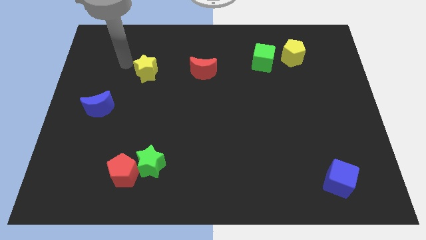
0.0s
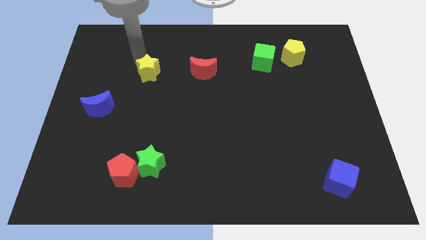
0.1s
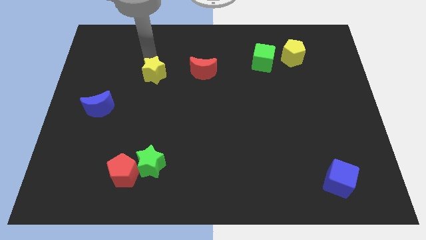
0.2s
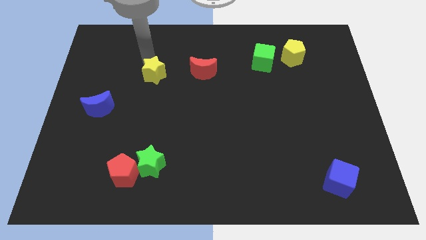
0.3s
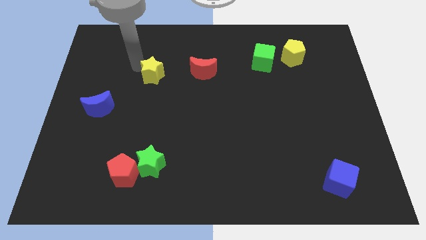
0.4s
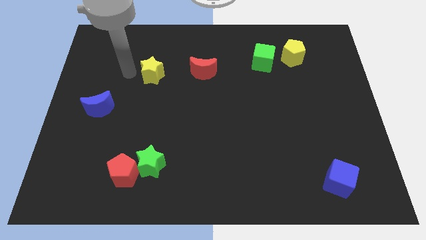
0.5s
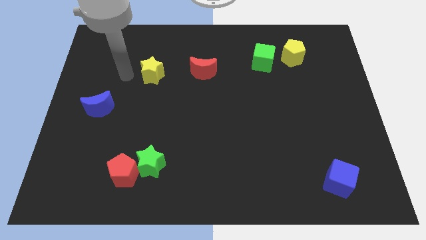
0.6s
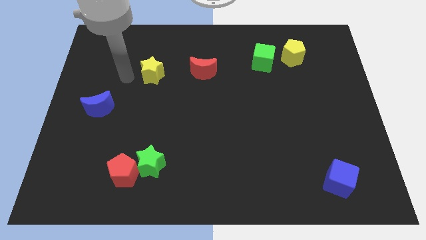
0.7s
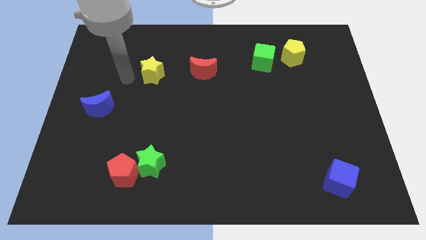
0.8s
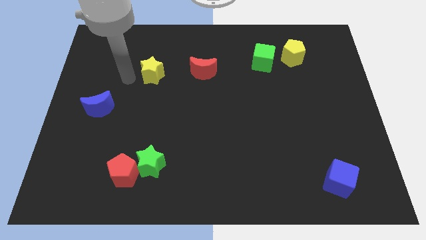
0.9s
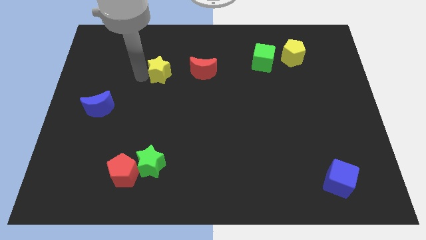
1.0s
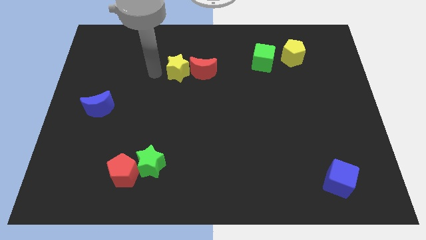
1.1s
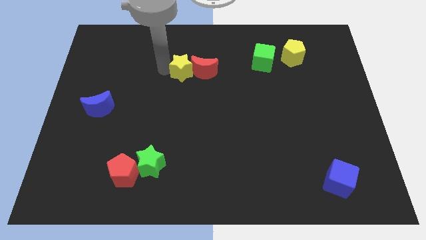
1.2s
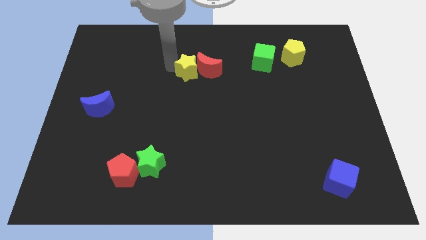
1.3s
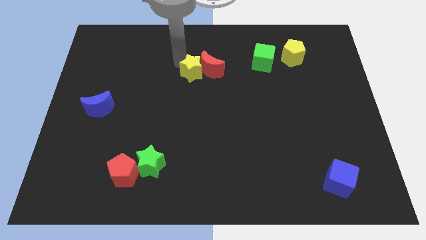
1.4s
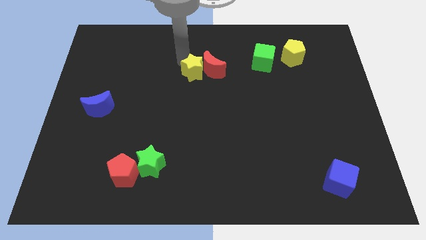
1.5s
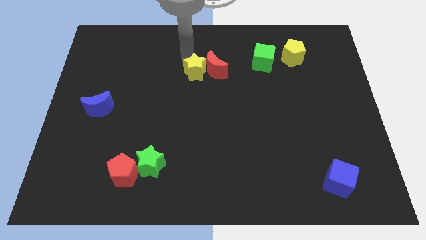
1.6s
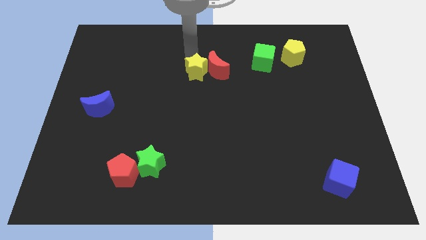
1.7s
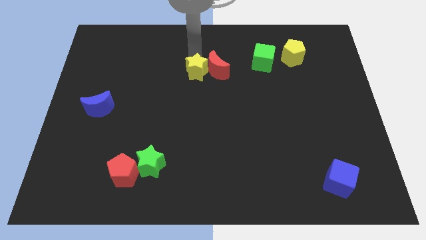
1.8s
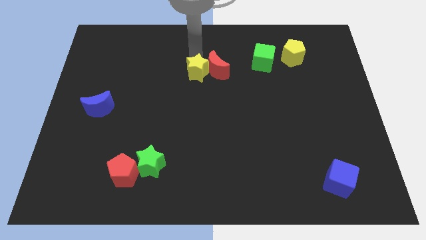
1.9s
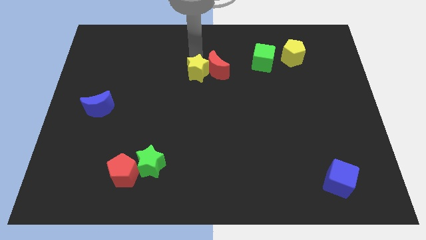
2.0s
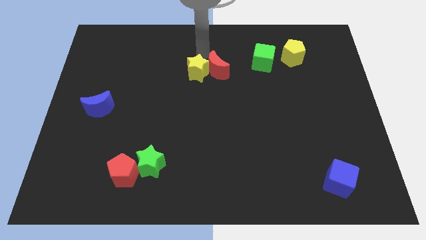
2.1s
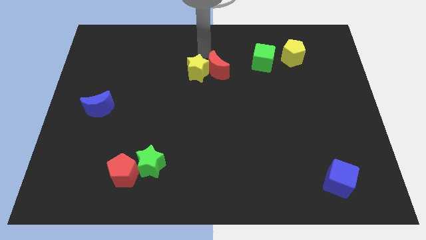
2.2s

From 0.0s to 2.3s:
push the yellow star into the red crescent

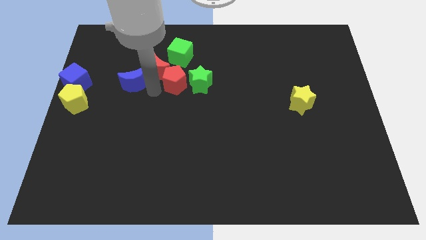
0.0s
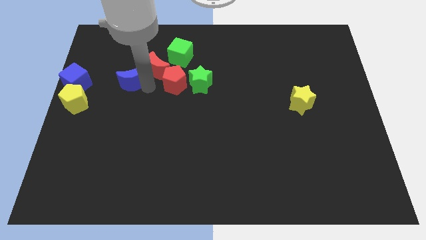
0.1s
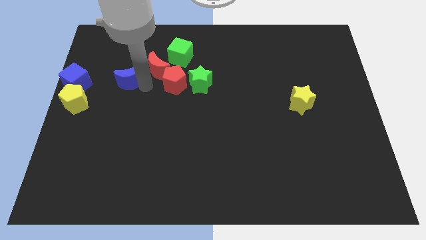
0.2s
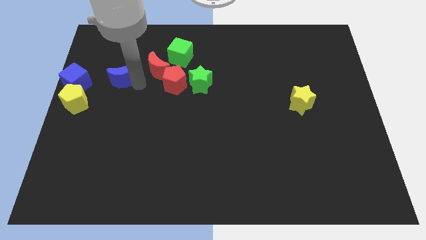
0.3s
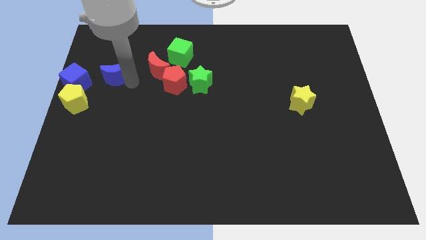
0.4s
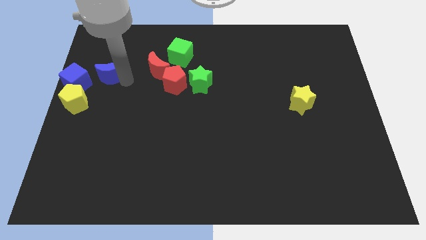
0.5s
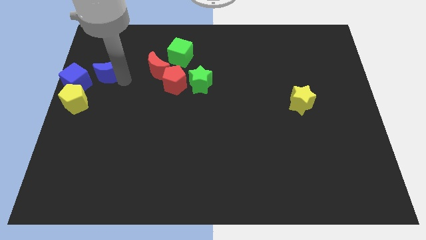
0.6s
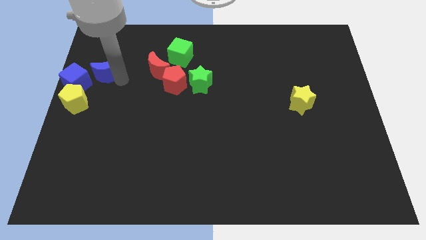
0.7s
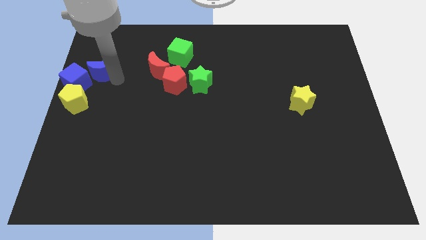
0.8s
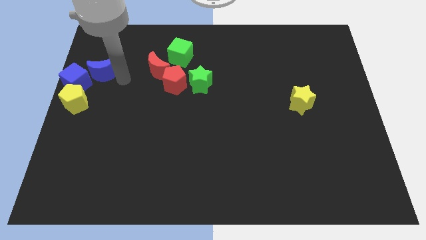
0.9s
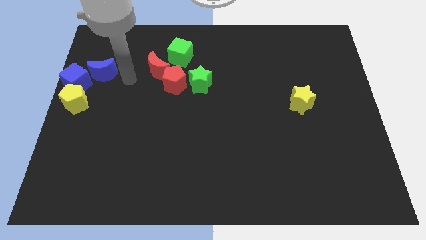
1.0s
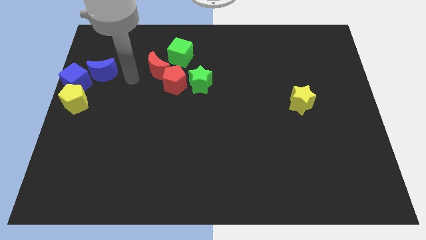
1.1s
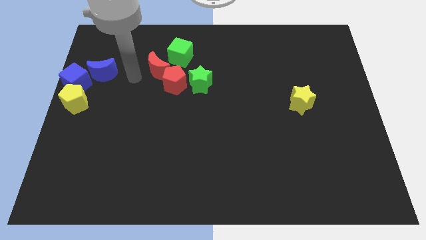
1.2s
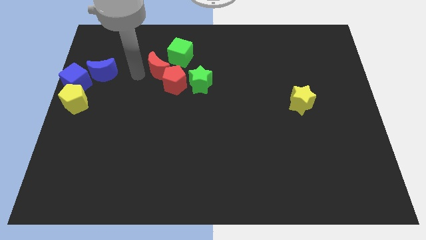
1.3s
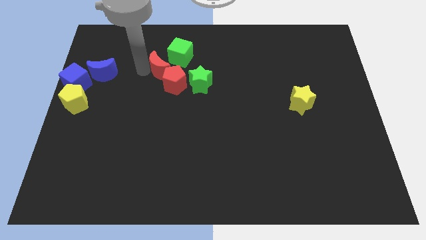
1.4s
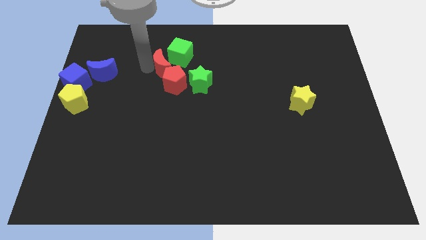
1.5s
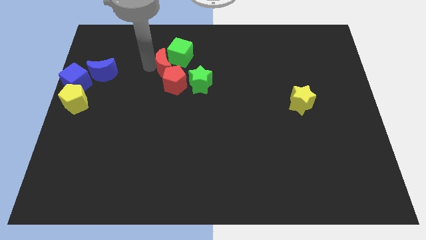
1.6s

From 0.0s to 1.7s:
move the blue crescent to the right side of the blue cube

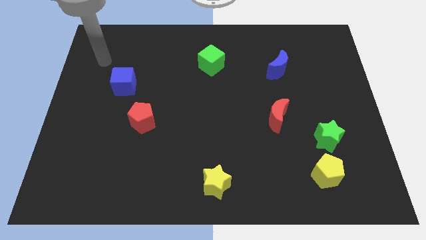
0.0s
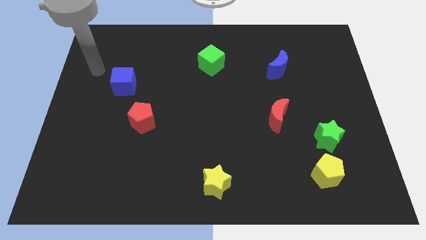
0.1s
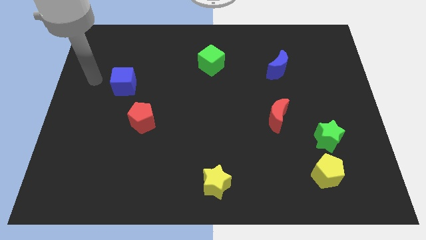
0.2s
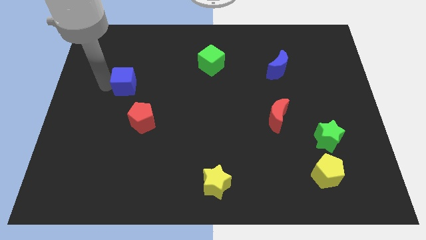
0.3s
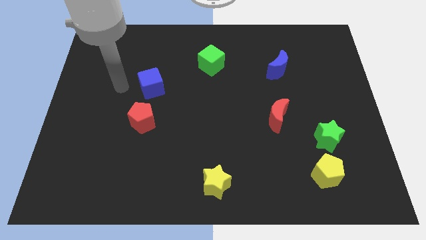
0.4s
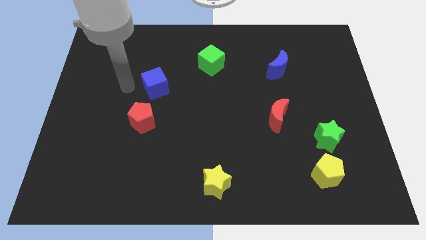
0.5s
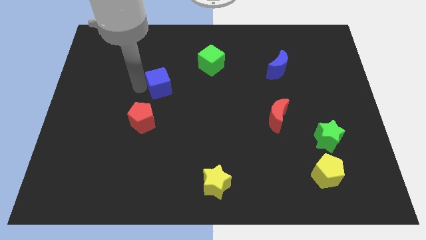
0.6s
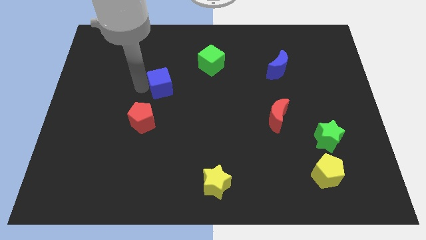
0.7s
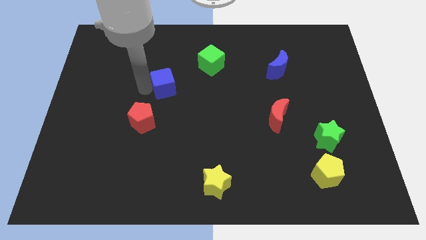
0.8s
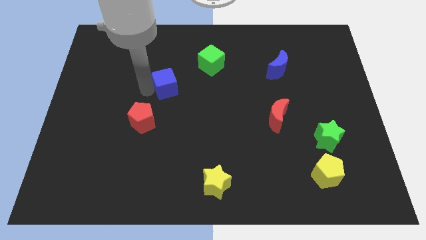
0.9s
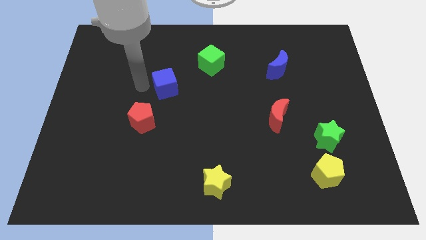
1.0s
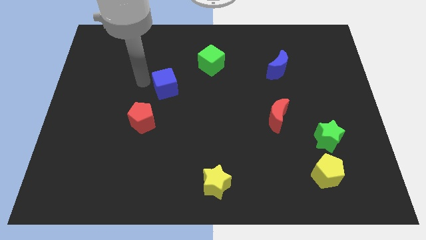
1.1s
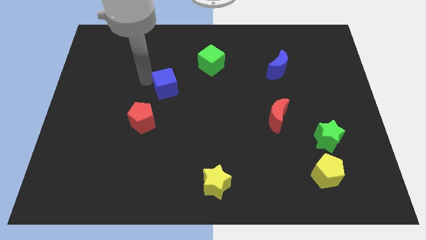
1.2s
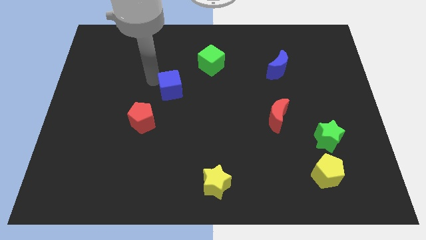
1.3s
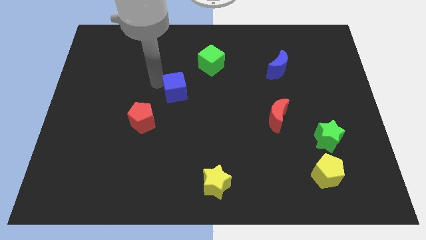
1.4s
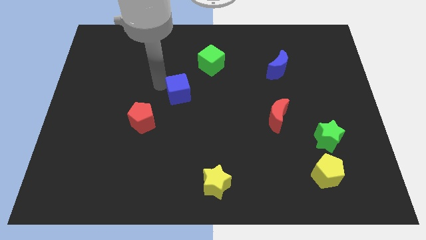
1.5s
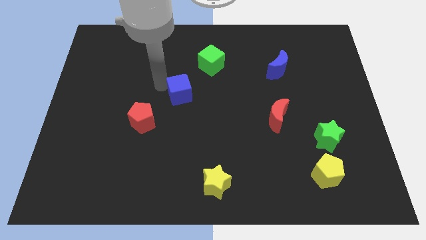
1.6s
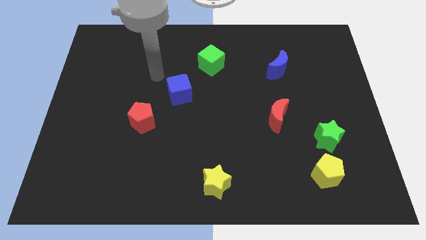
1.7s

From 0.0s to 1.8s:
place the blue cube in between the red pentagon and the green cube

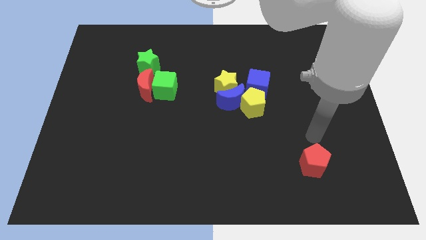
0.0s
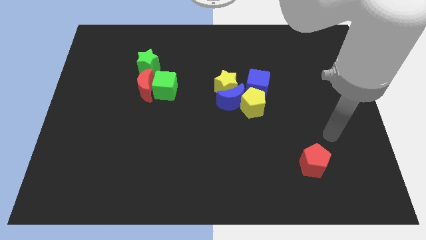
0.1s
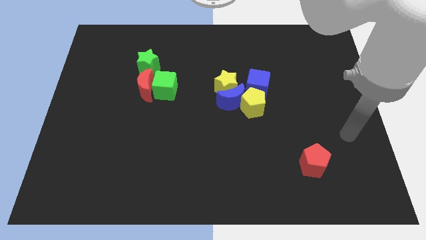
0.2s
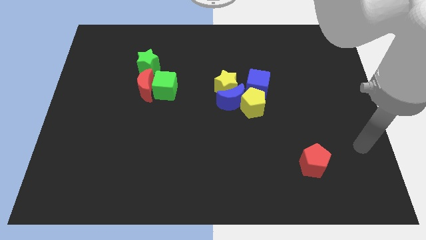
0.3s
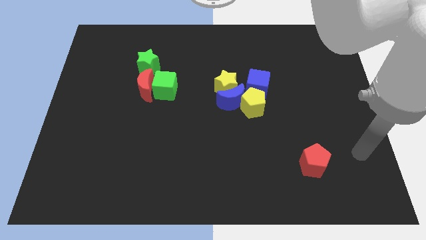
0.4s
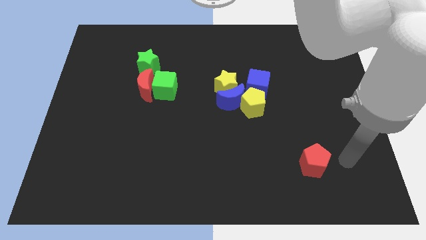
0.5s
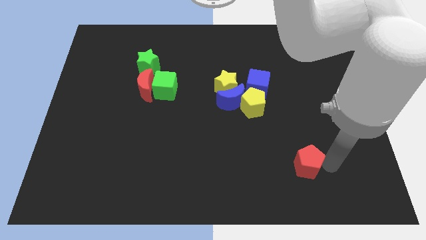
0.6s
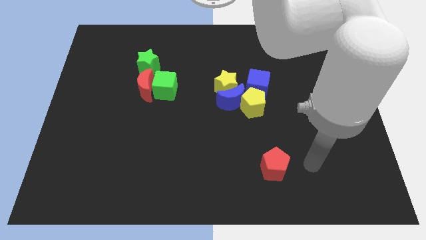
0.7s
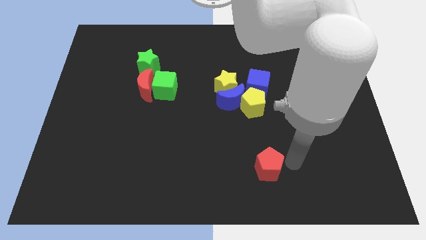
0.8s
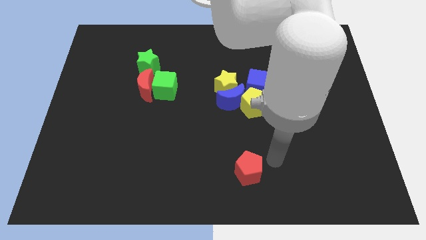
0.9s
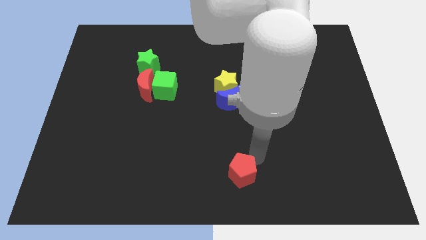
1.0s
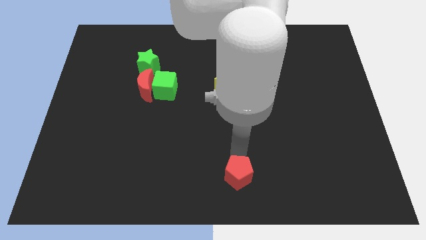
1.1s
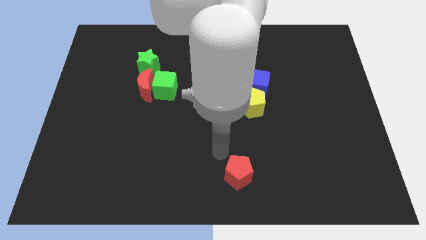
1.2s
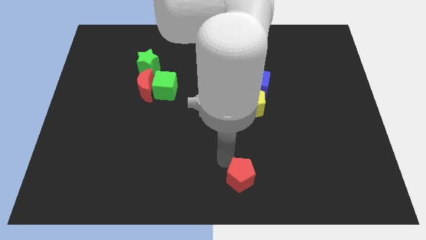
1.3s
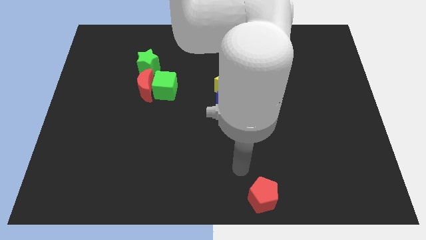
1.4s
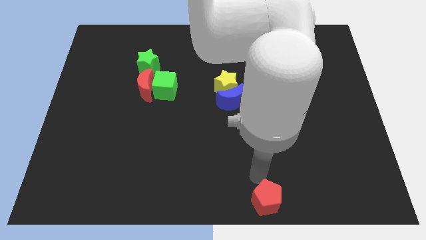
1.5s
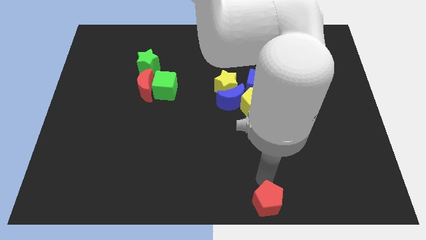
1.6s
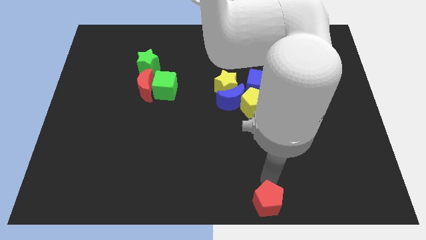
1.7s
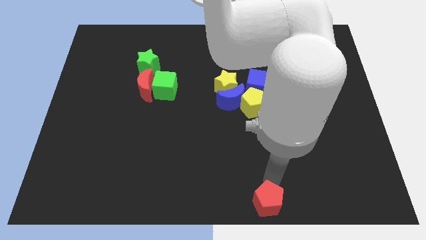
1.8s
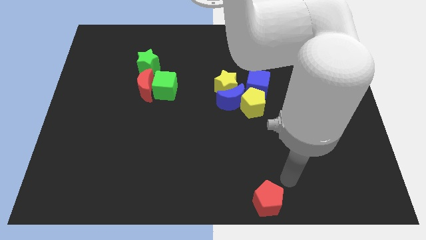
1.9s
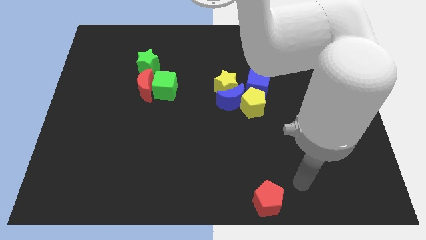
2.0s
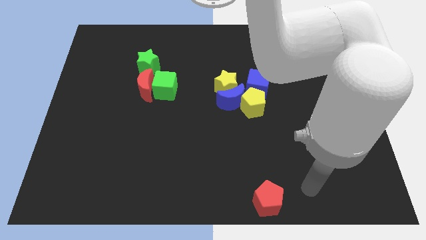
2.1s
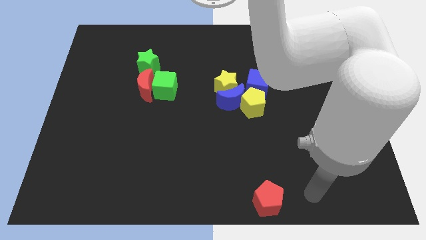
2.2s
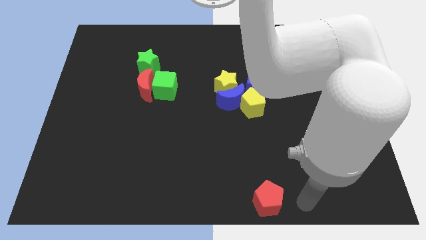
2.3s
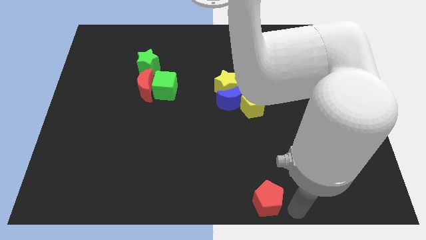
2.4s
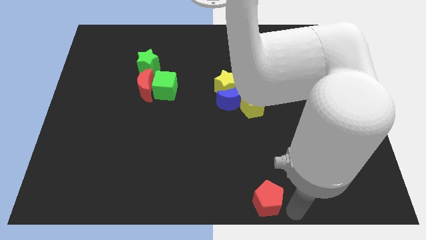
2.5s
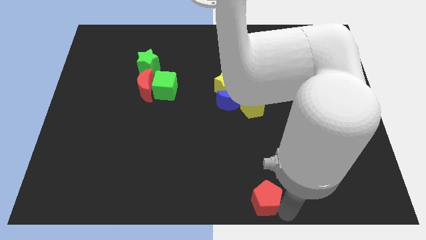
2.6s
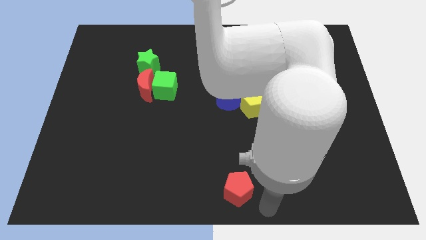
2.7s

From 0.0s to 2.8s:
place the red pentagon at the bottom center of the board

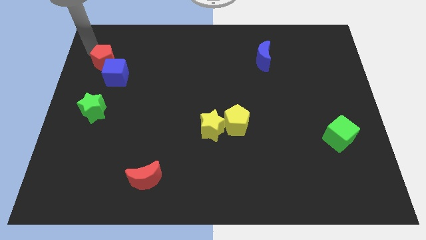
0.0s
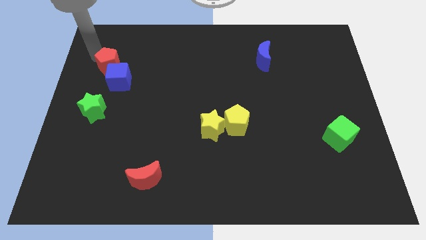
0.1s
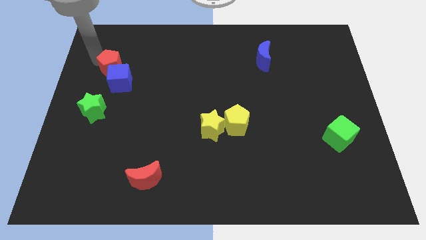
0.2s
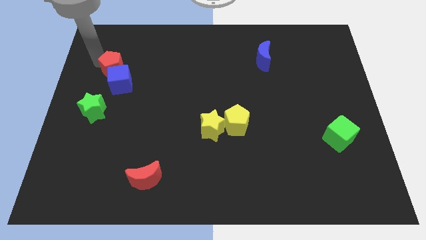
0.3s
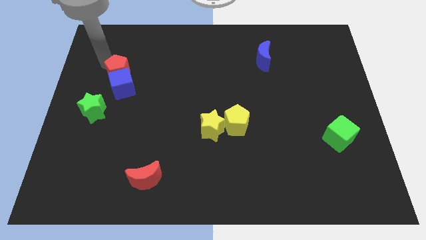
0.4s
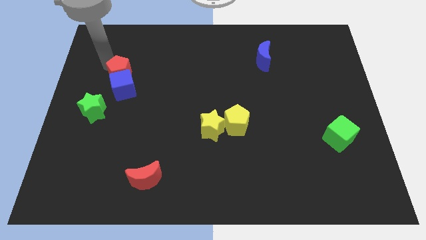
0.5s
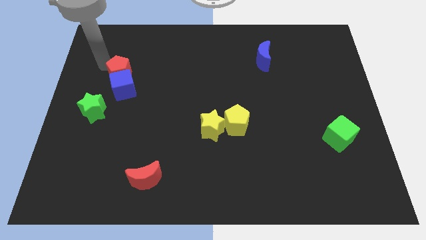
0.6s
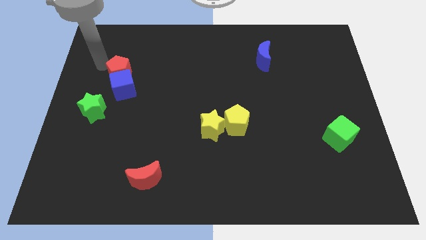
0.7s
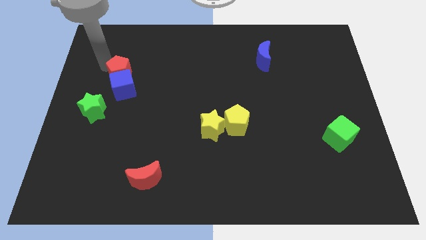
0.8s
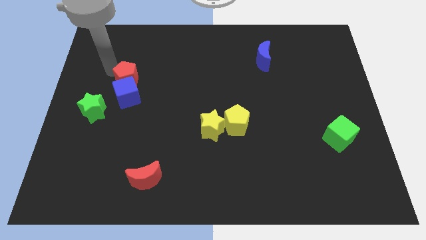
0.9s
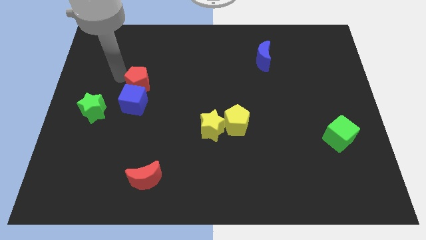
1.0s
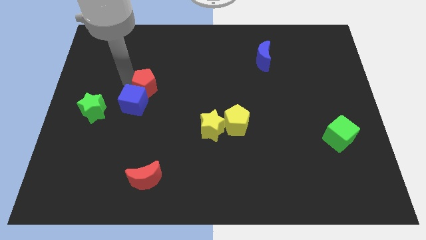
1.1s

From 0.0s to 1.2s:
push the red pentagon into the blue cube
